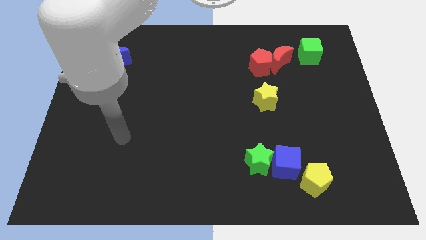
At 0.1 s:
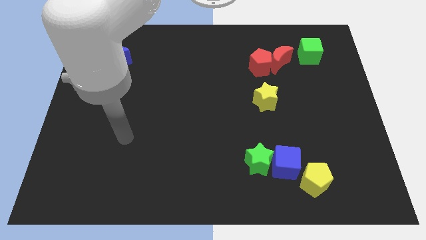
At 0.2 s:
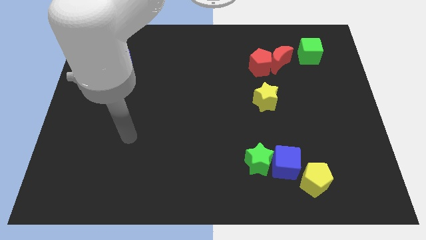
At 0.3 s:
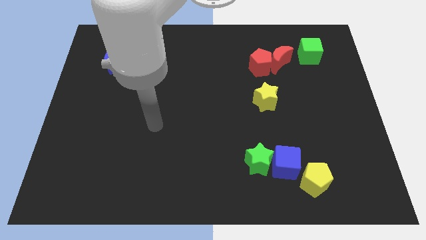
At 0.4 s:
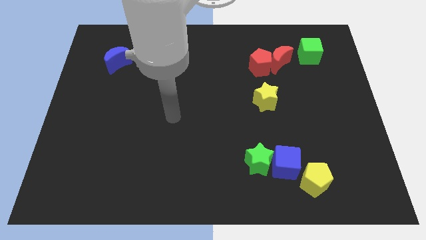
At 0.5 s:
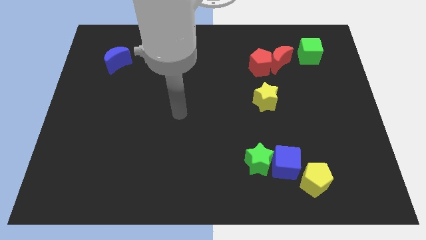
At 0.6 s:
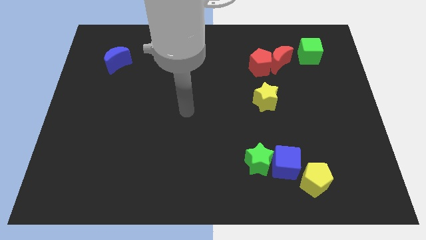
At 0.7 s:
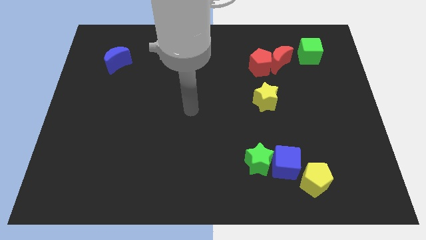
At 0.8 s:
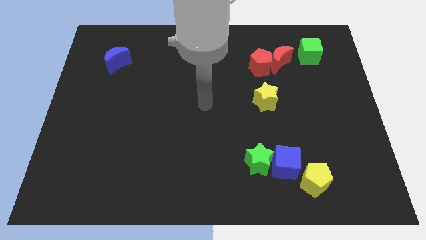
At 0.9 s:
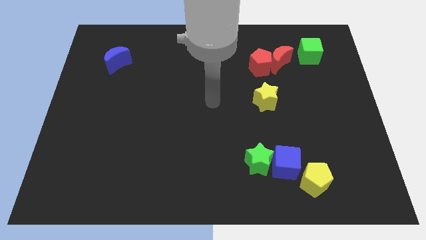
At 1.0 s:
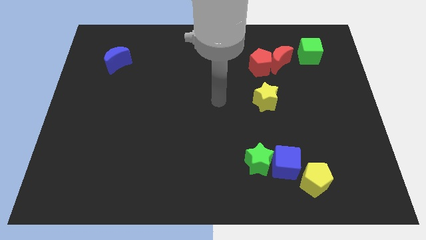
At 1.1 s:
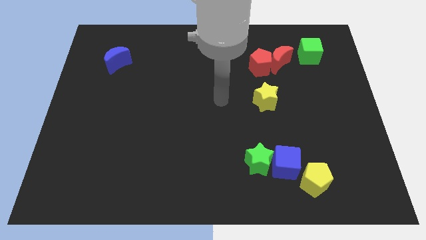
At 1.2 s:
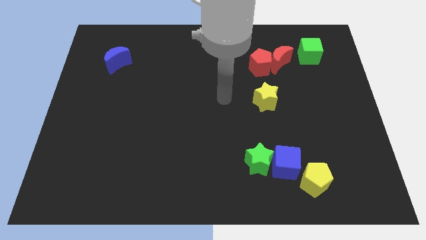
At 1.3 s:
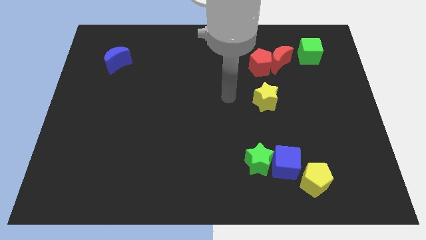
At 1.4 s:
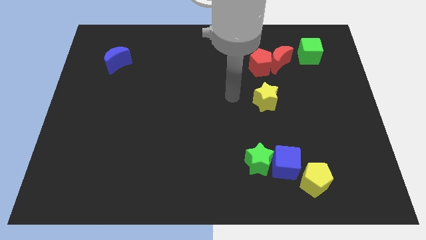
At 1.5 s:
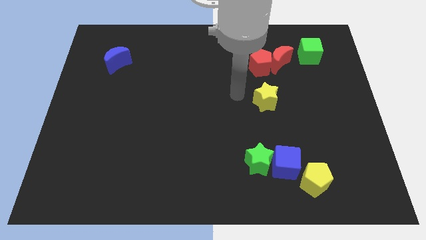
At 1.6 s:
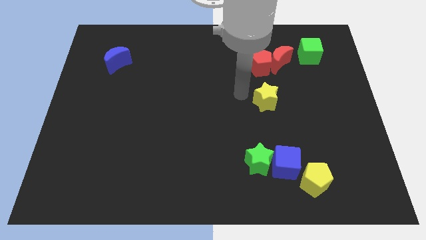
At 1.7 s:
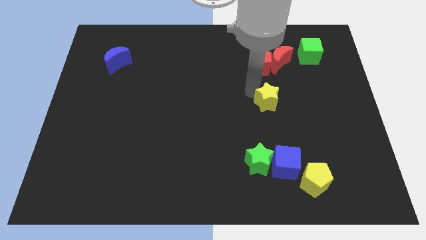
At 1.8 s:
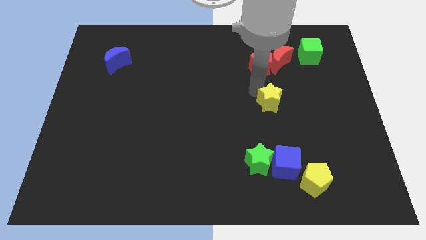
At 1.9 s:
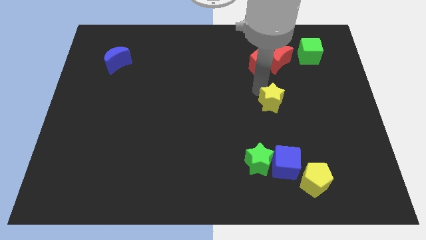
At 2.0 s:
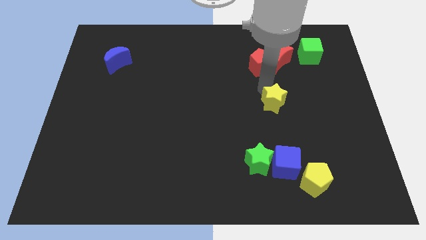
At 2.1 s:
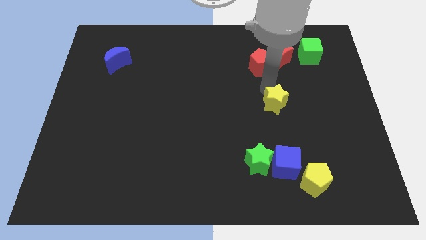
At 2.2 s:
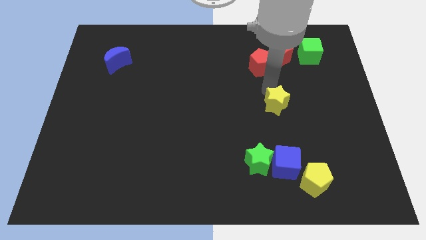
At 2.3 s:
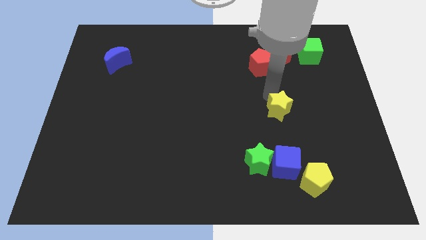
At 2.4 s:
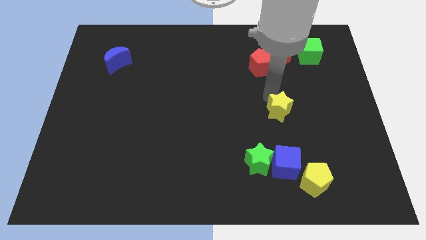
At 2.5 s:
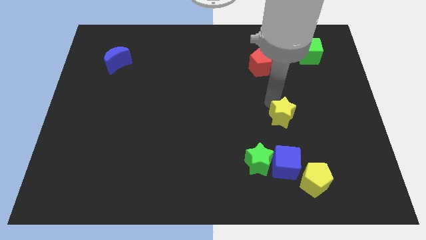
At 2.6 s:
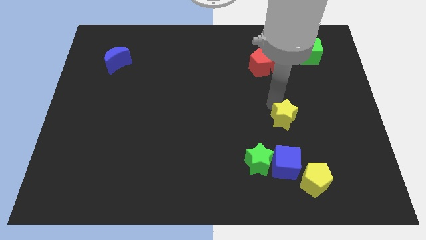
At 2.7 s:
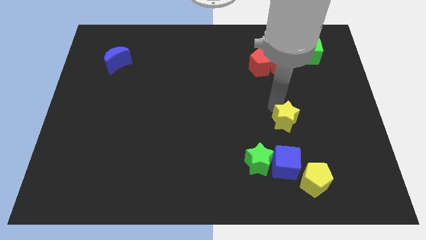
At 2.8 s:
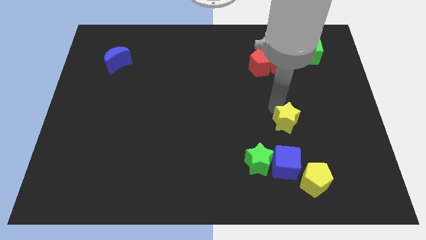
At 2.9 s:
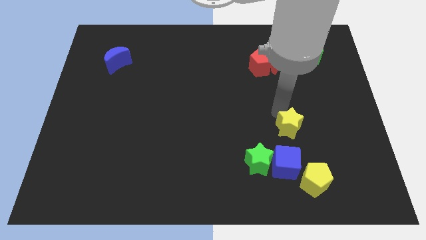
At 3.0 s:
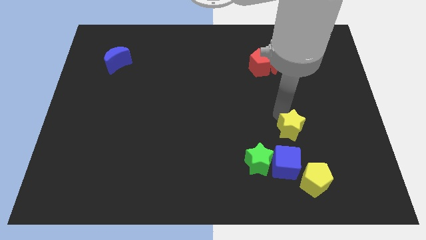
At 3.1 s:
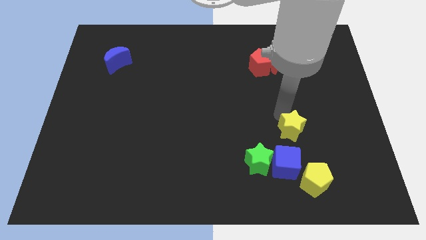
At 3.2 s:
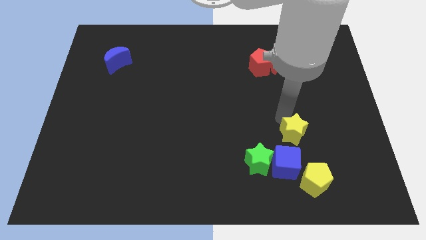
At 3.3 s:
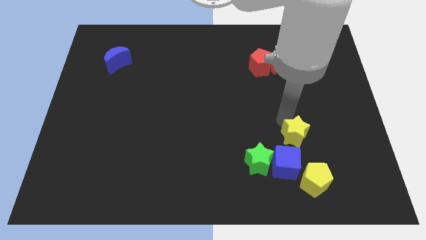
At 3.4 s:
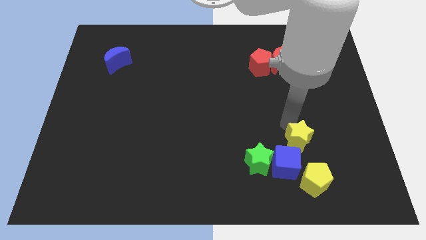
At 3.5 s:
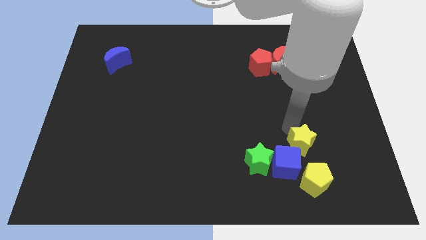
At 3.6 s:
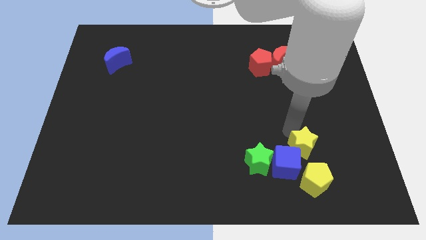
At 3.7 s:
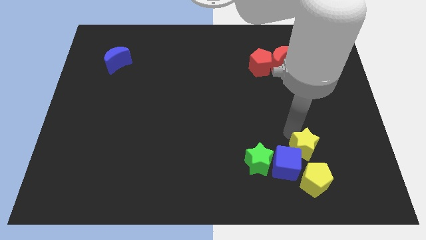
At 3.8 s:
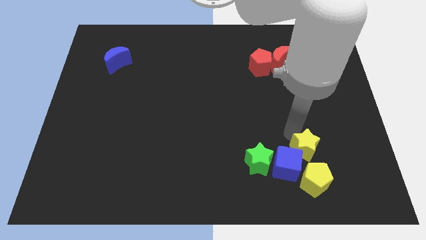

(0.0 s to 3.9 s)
slide the yellow star towards the blue cube

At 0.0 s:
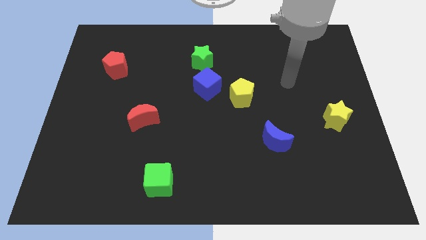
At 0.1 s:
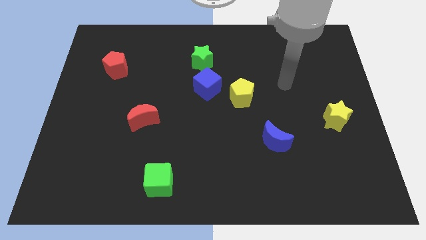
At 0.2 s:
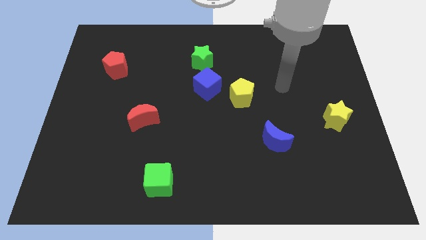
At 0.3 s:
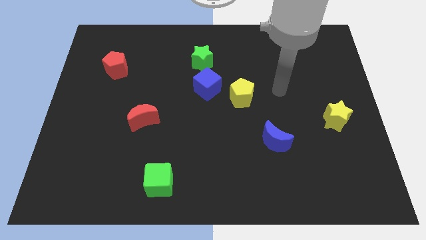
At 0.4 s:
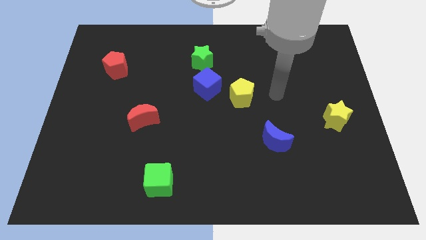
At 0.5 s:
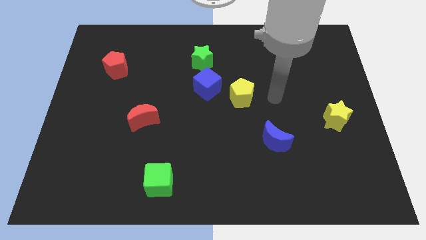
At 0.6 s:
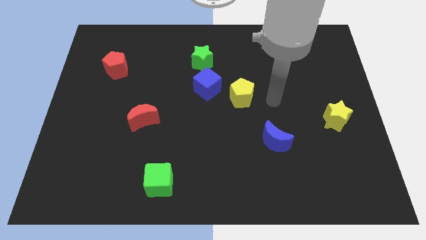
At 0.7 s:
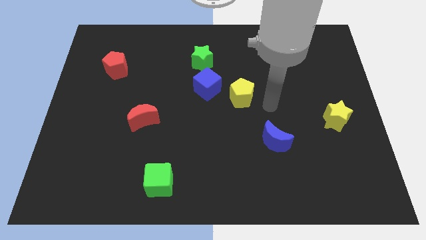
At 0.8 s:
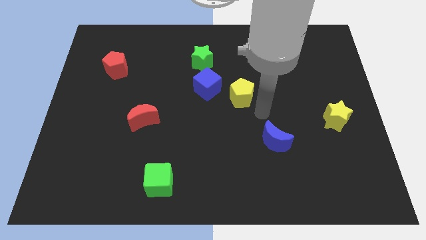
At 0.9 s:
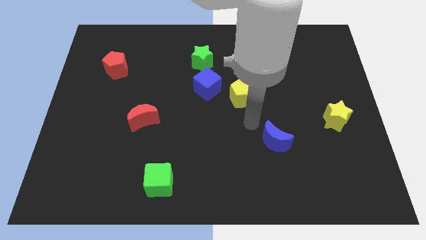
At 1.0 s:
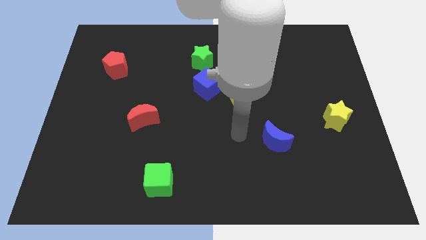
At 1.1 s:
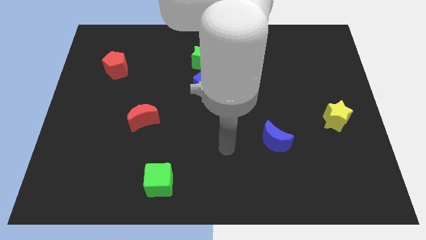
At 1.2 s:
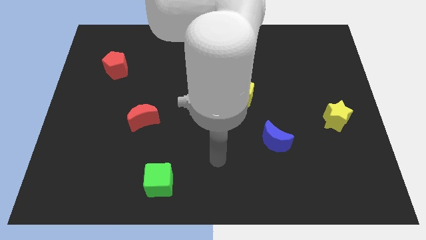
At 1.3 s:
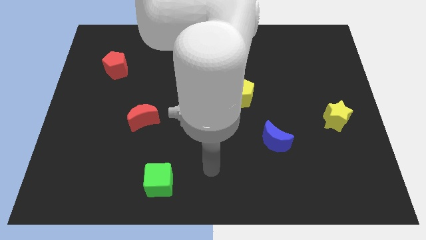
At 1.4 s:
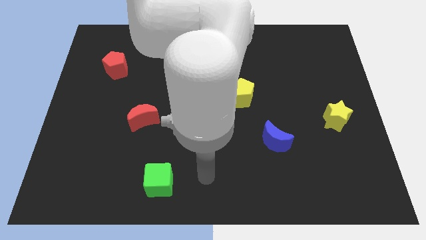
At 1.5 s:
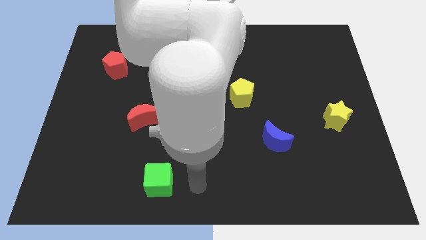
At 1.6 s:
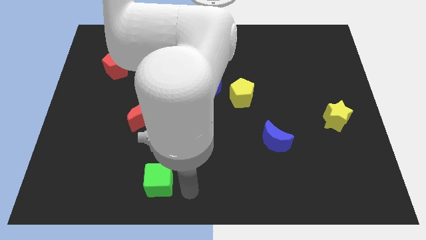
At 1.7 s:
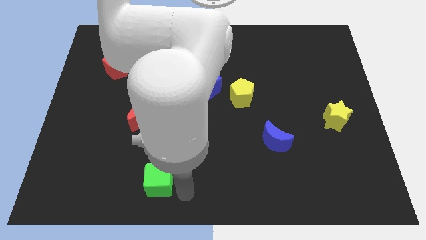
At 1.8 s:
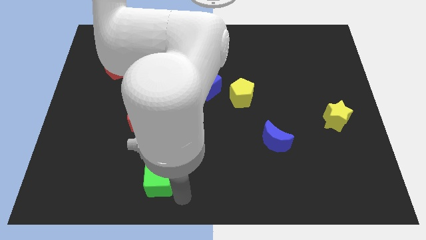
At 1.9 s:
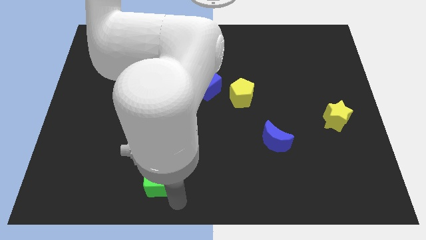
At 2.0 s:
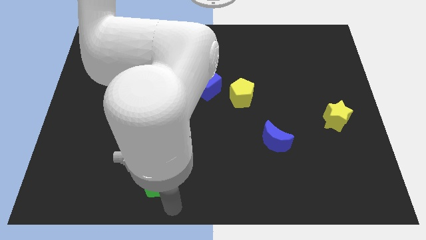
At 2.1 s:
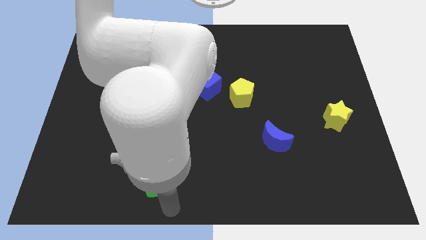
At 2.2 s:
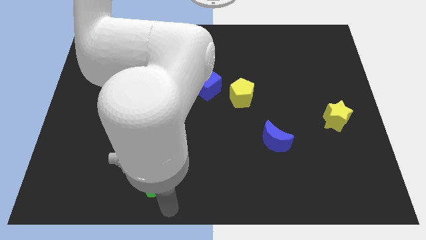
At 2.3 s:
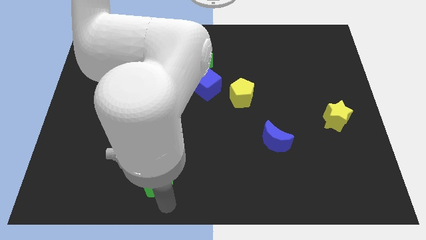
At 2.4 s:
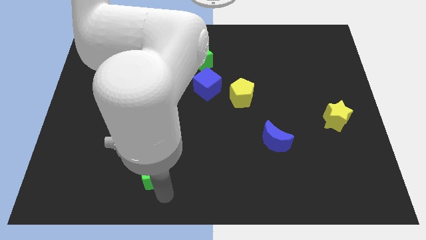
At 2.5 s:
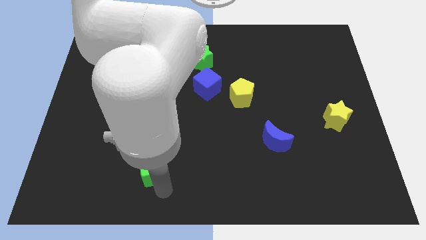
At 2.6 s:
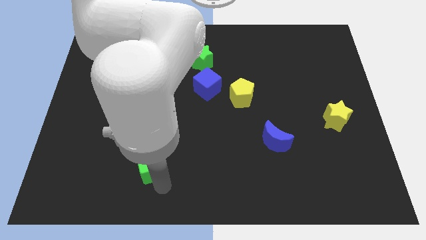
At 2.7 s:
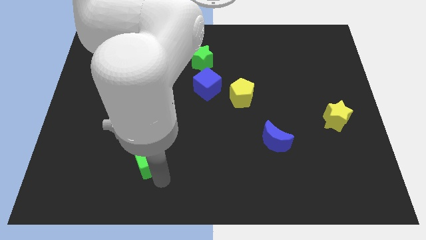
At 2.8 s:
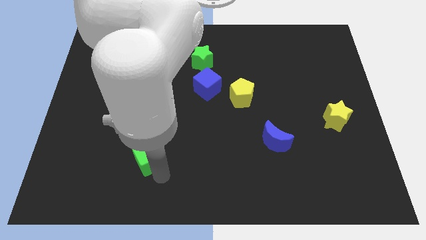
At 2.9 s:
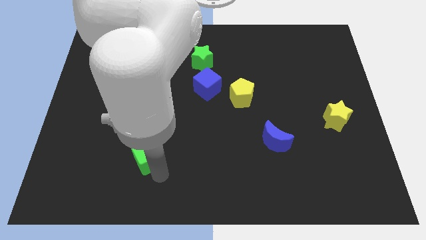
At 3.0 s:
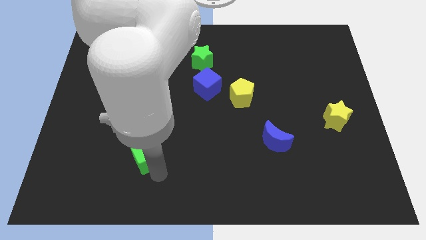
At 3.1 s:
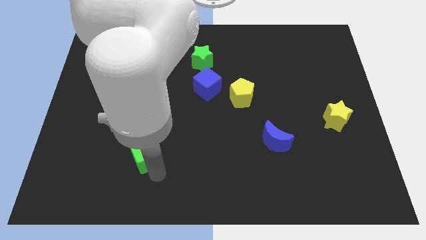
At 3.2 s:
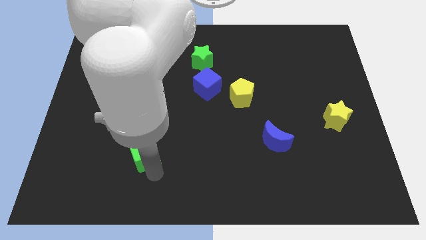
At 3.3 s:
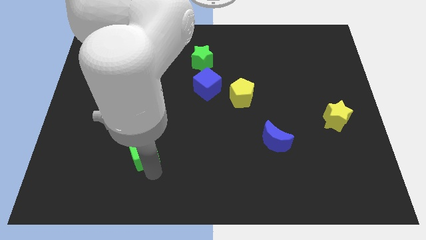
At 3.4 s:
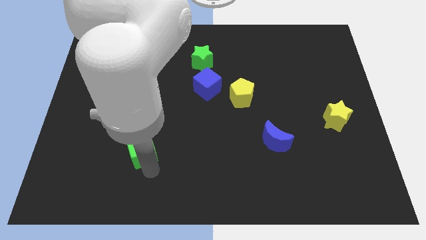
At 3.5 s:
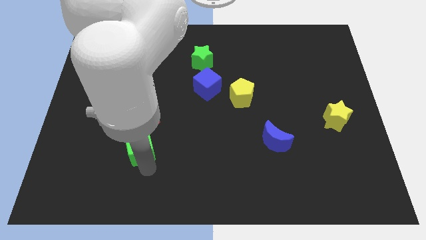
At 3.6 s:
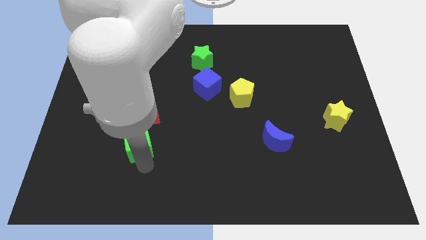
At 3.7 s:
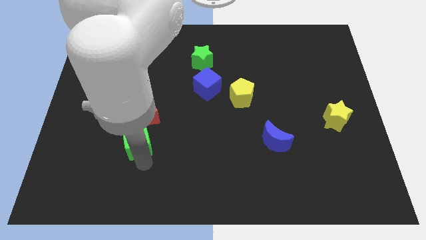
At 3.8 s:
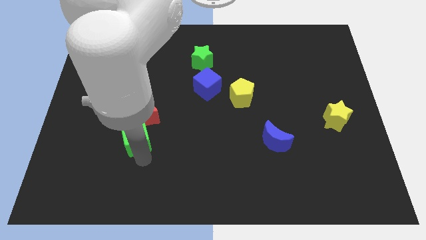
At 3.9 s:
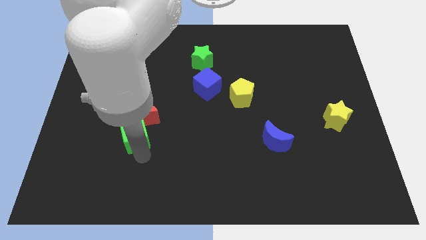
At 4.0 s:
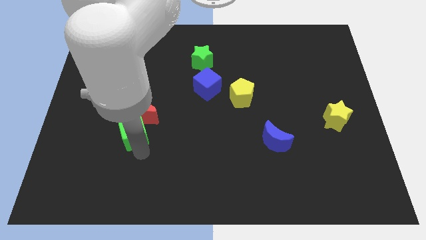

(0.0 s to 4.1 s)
move the green cube next to the red moon
